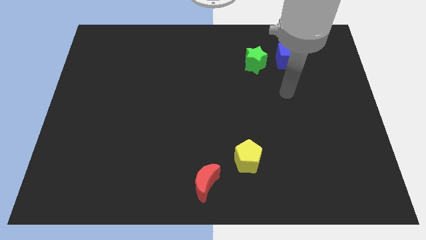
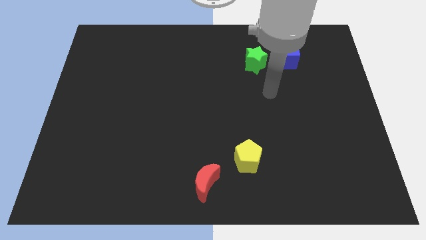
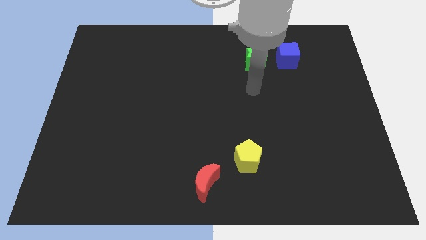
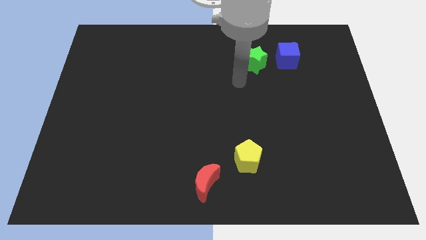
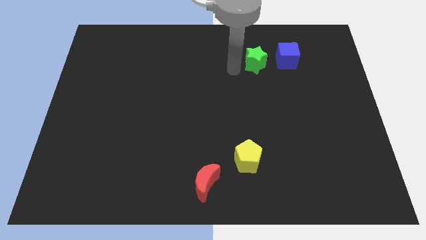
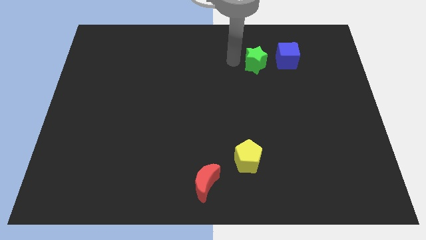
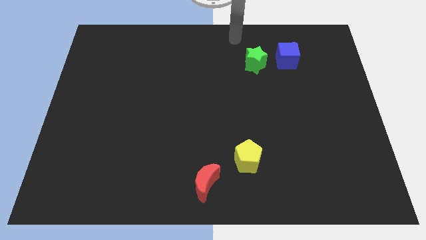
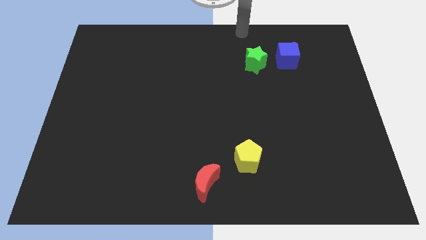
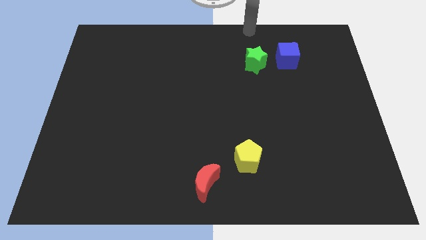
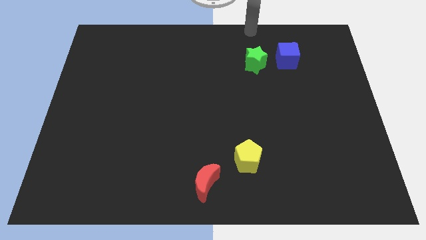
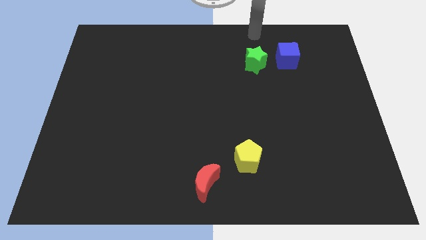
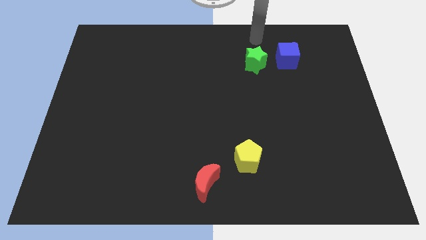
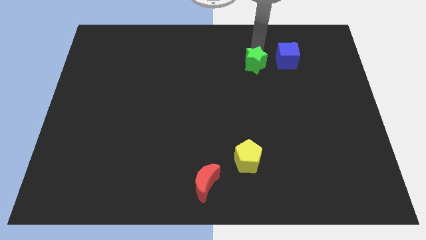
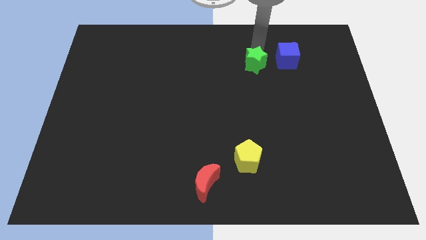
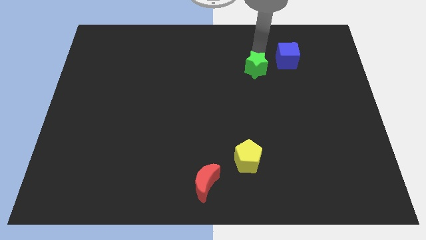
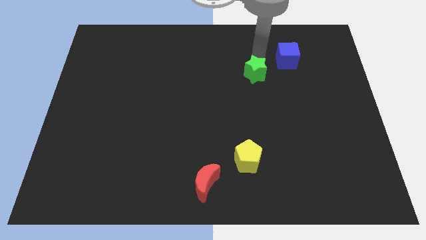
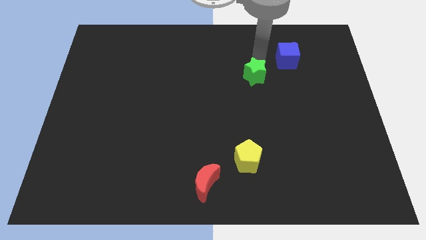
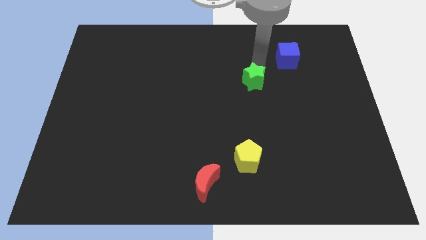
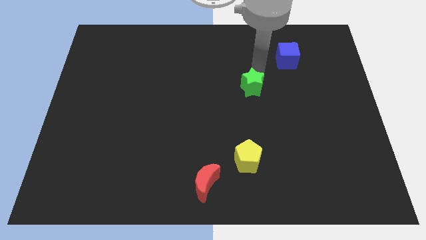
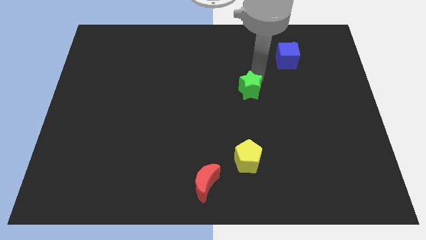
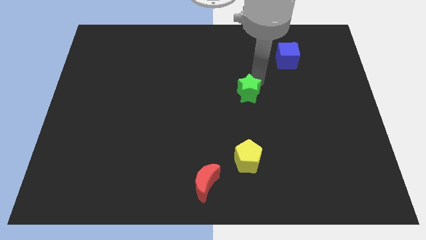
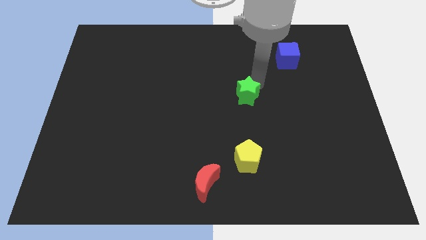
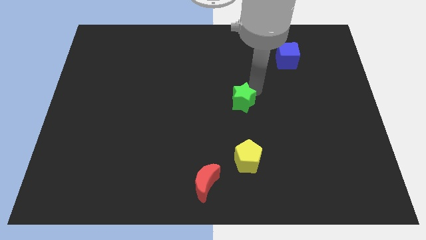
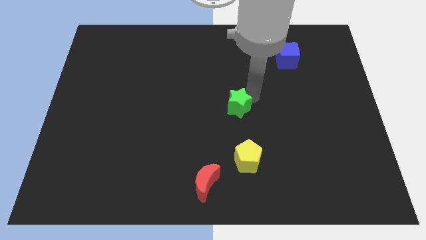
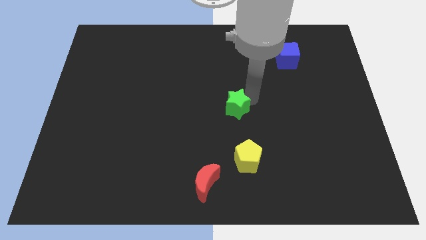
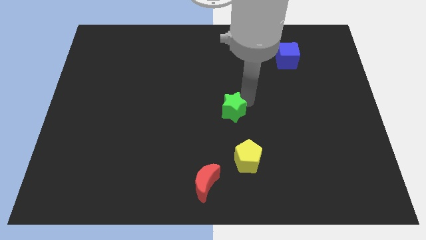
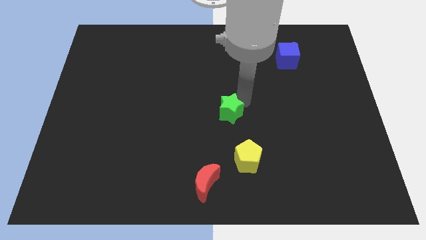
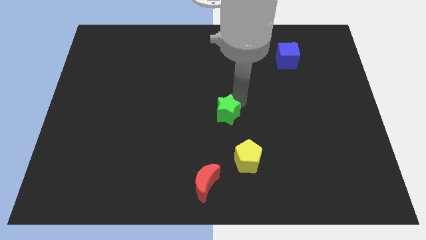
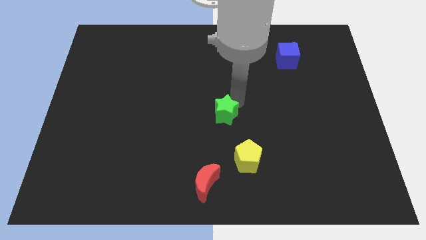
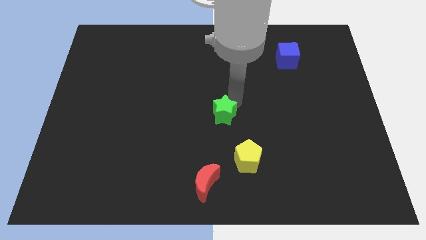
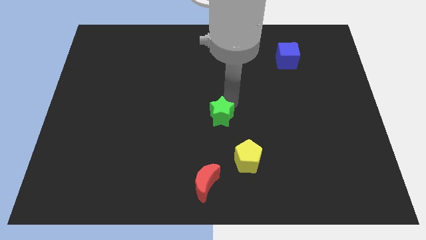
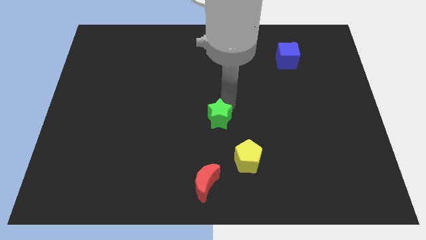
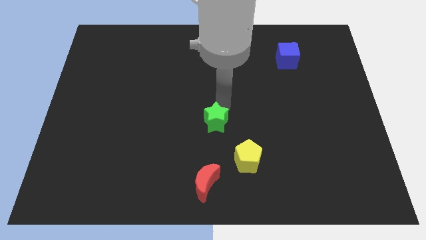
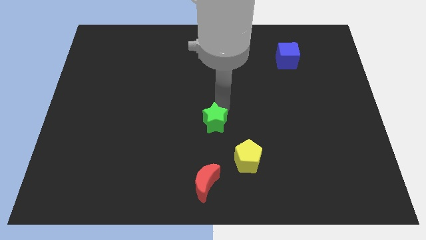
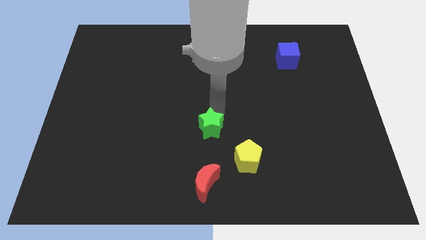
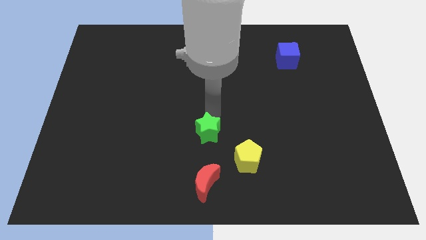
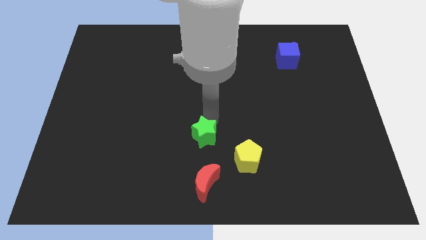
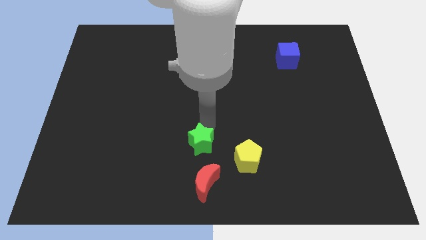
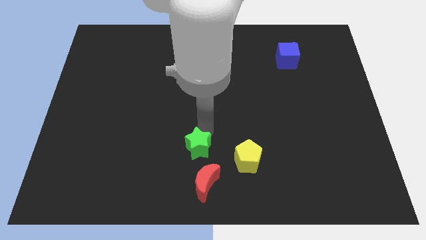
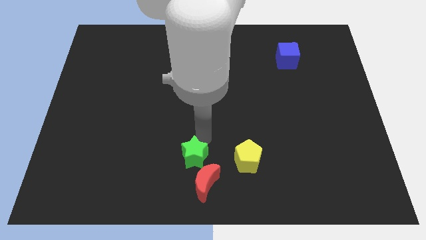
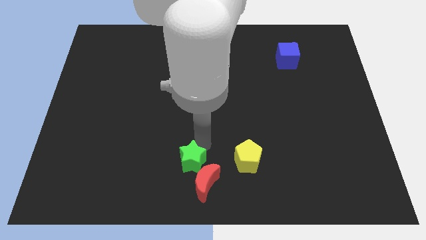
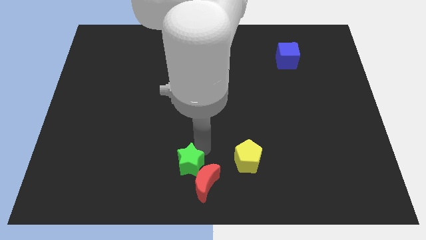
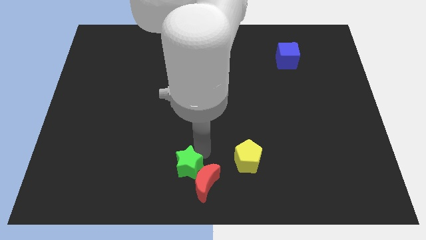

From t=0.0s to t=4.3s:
put the green block towards the moon

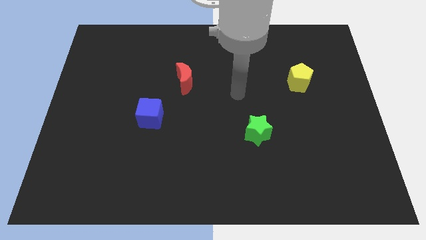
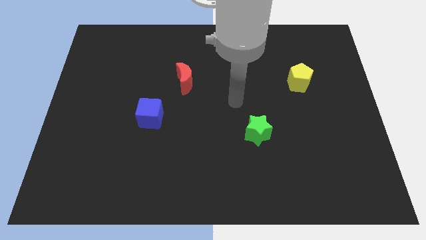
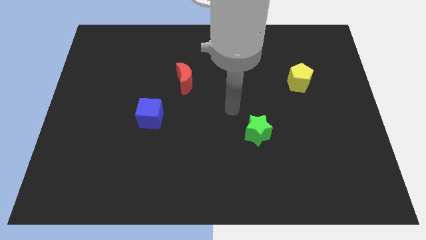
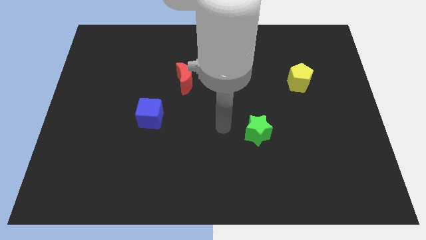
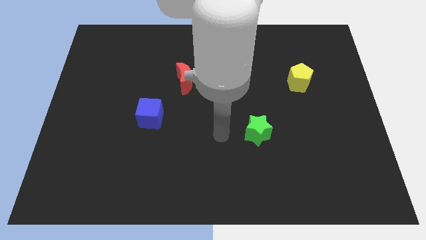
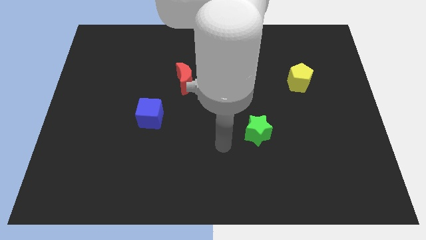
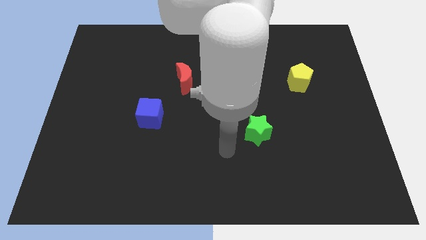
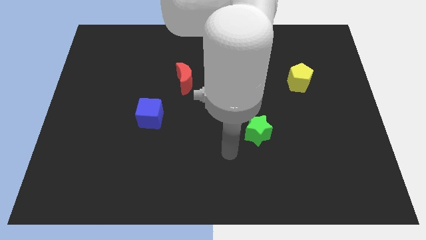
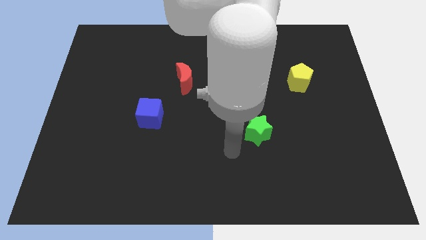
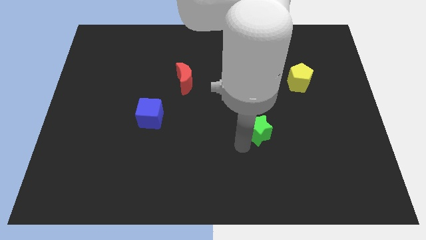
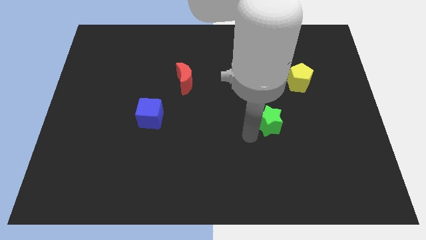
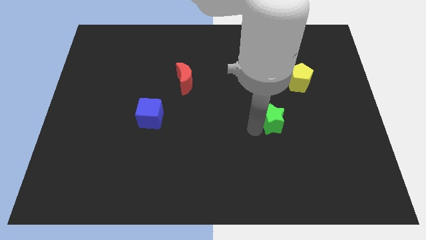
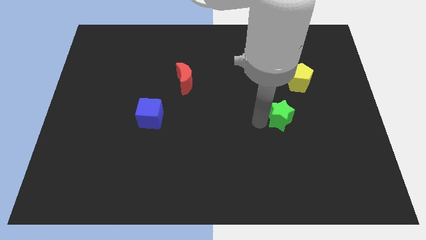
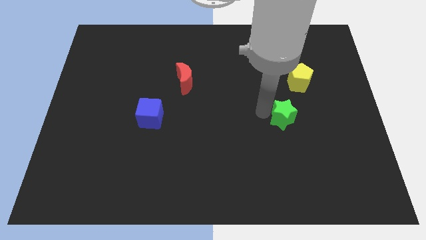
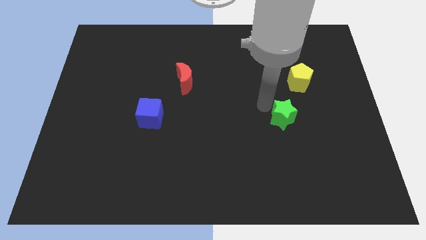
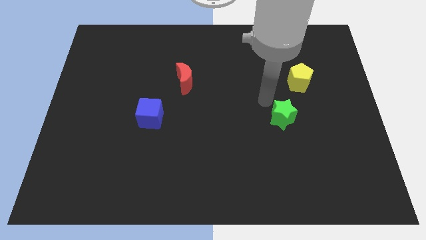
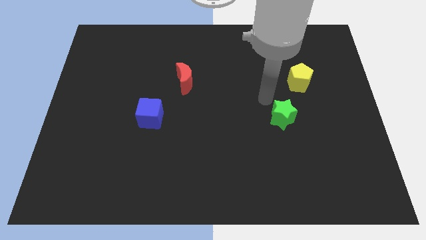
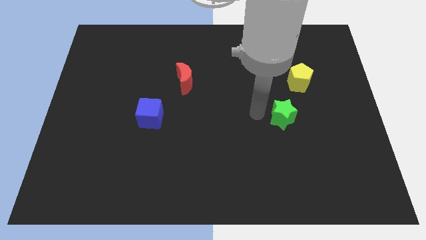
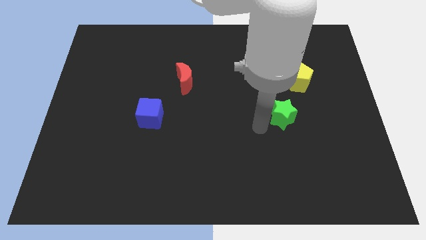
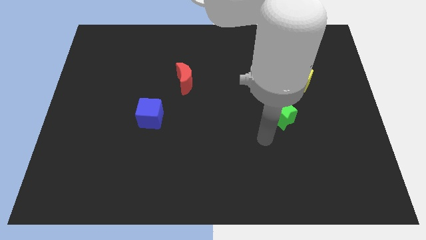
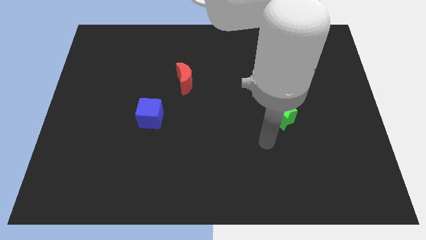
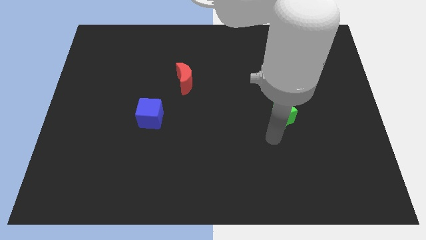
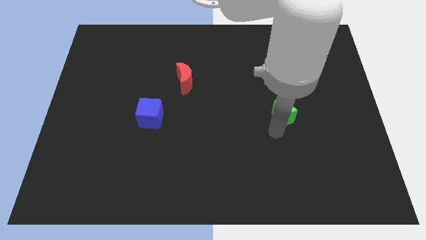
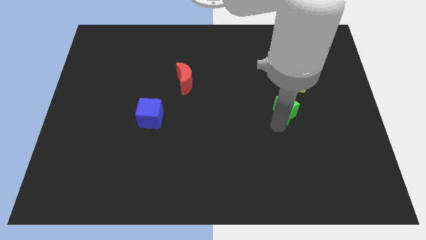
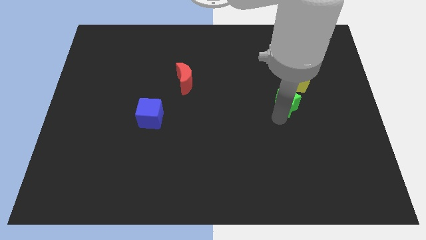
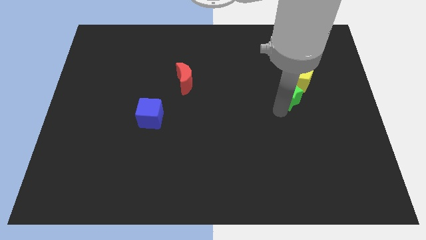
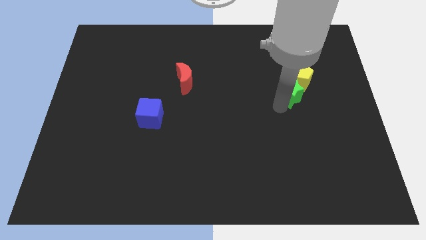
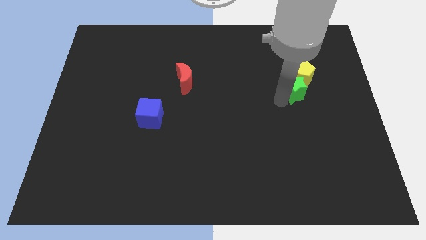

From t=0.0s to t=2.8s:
move the green block next to the pentagon

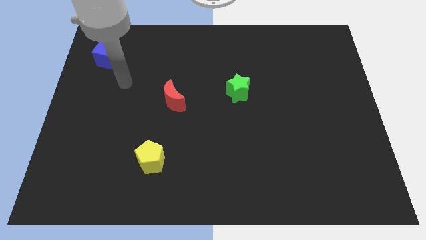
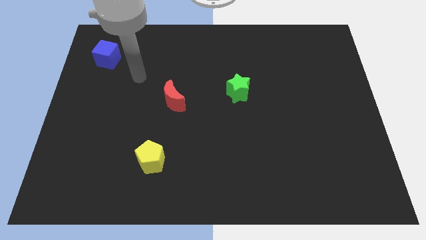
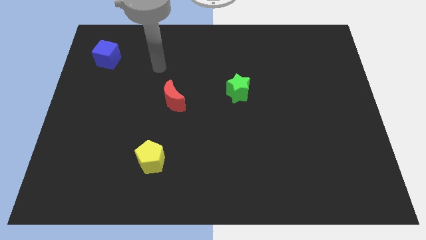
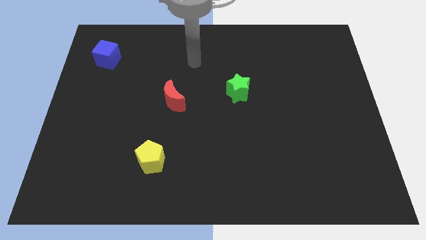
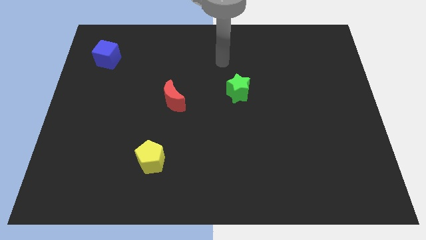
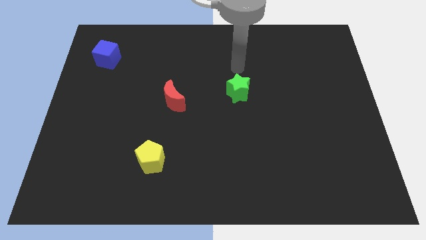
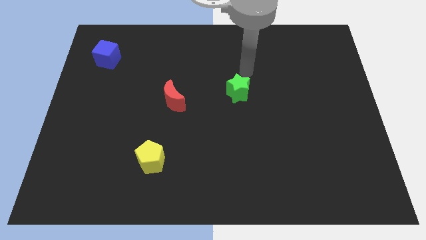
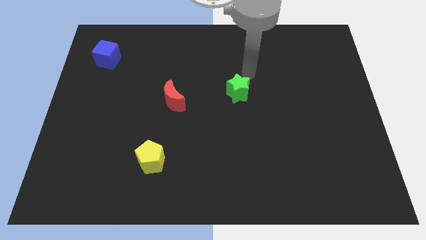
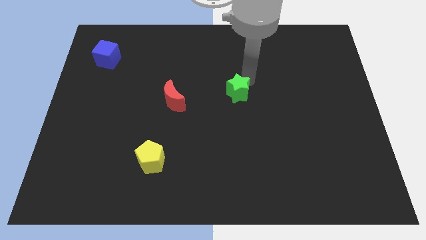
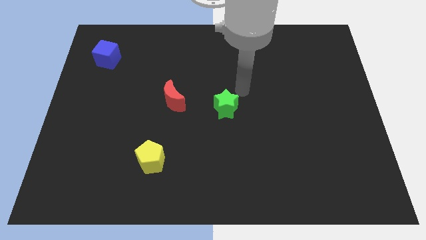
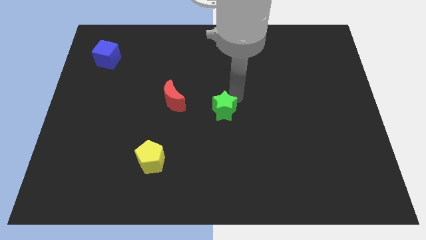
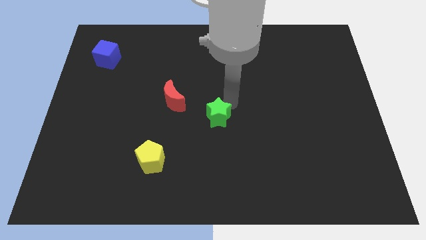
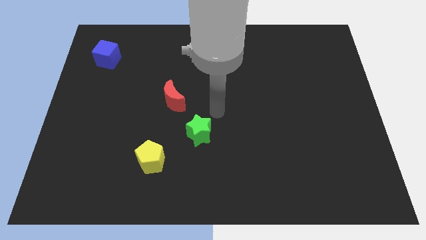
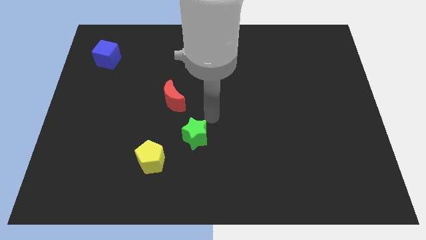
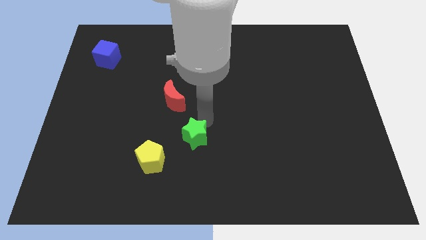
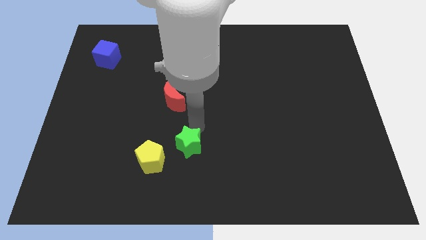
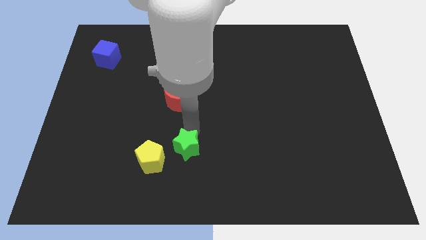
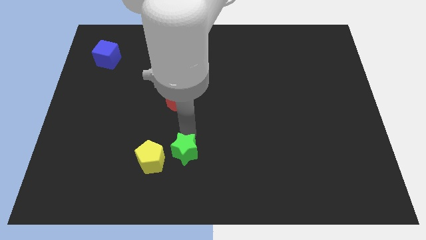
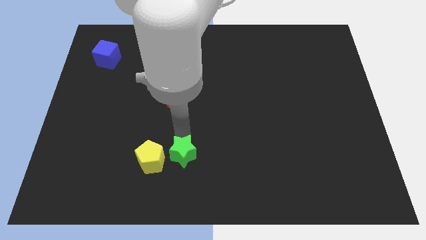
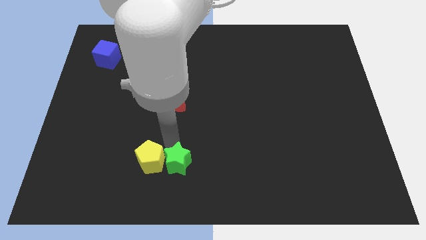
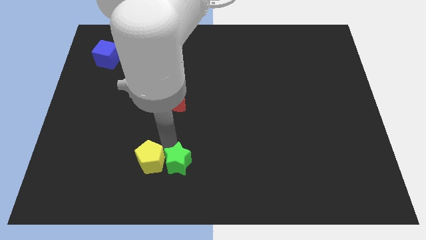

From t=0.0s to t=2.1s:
put the star to the yellow block
